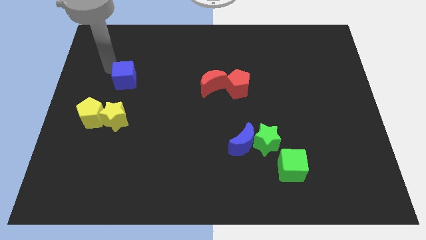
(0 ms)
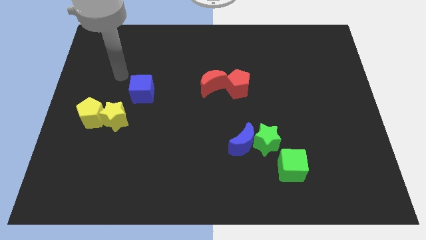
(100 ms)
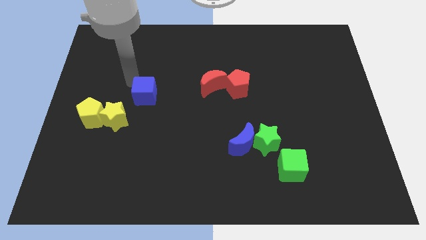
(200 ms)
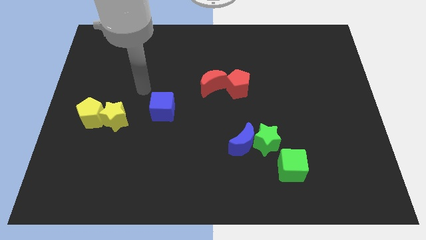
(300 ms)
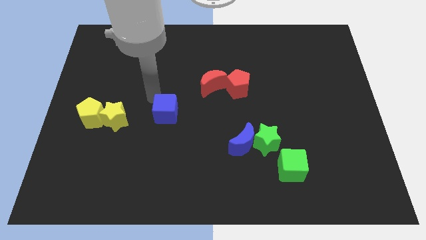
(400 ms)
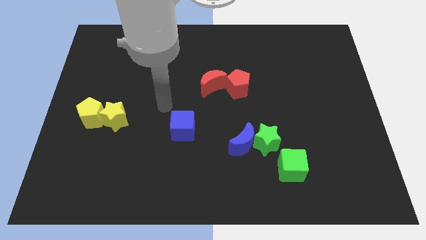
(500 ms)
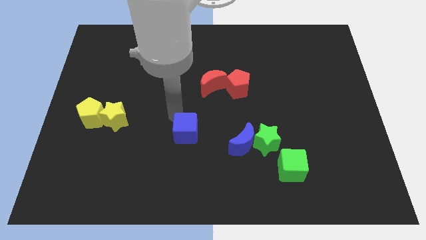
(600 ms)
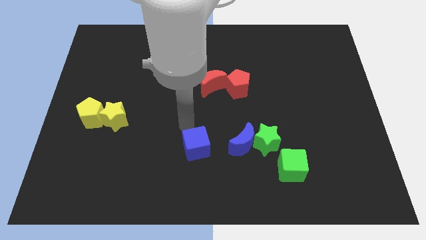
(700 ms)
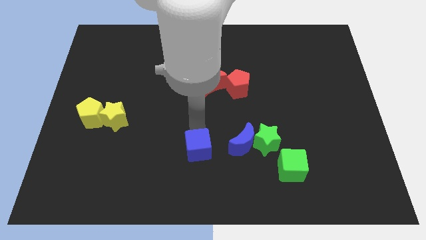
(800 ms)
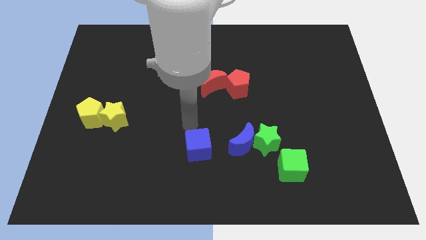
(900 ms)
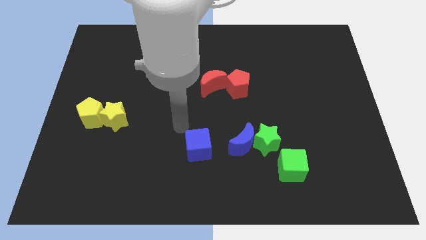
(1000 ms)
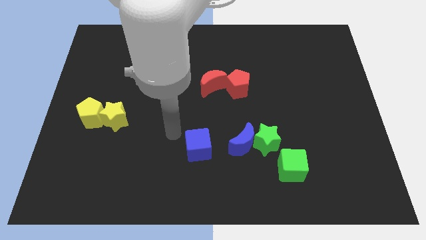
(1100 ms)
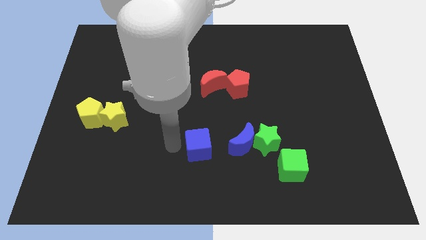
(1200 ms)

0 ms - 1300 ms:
push blue cube towards the left side of the blue crescent

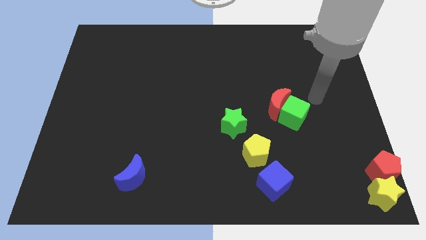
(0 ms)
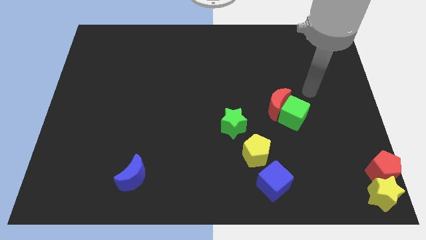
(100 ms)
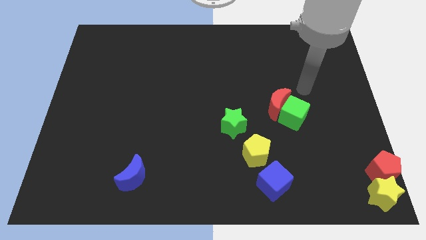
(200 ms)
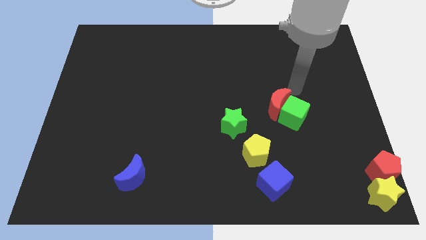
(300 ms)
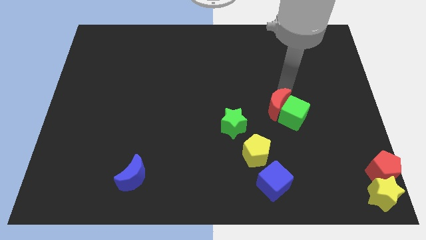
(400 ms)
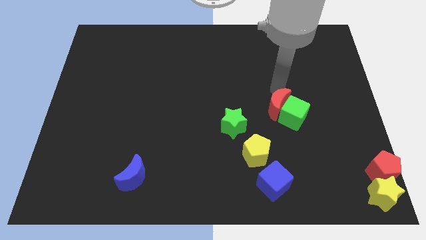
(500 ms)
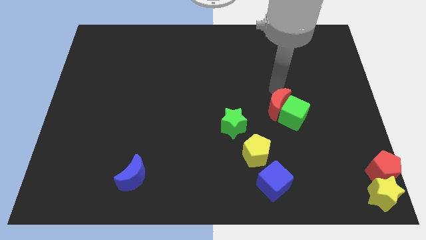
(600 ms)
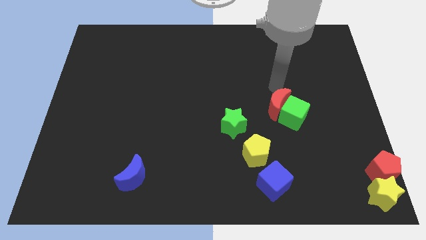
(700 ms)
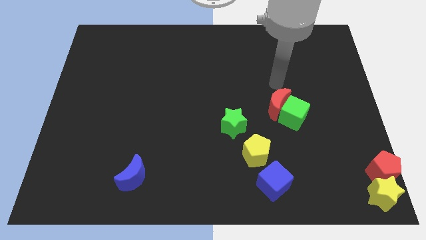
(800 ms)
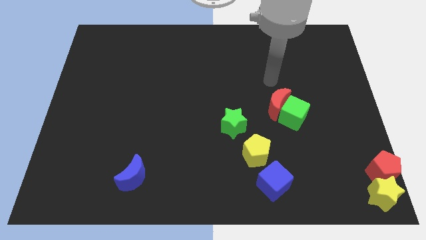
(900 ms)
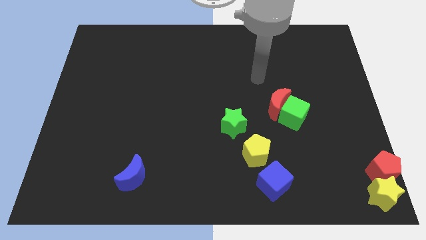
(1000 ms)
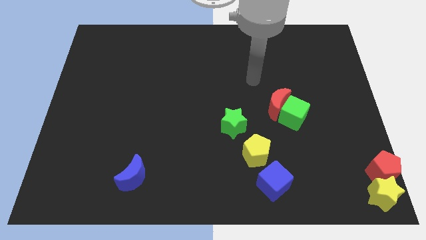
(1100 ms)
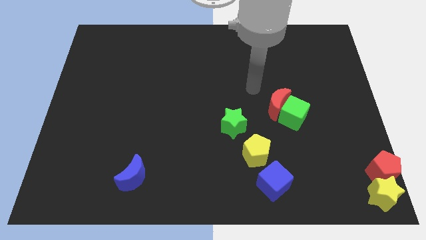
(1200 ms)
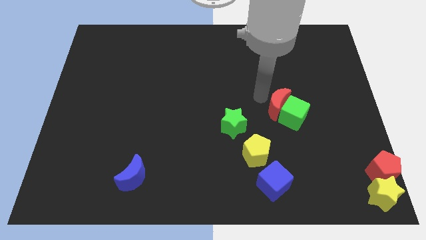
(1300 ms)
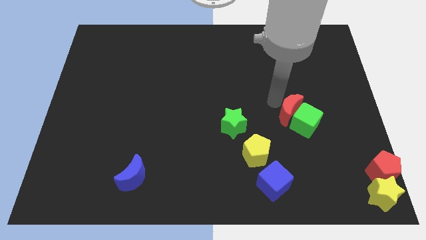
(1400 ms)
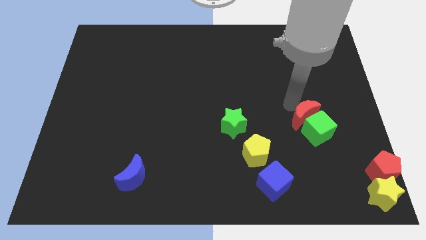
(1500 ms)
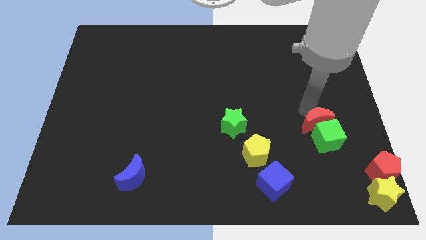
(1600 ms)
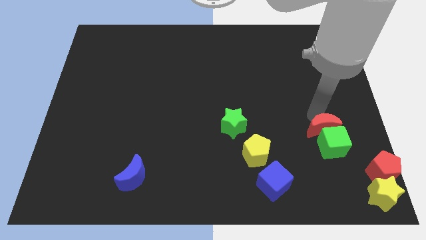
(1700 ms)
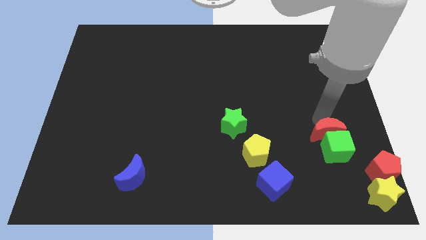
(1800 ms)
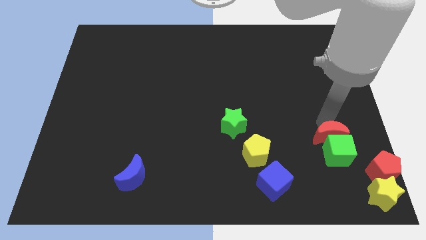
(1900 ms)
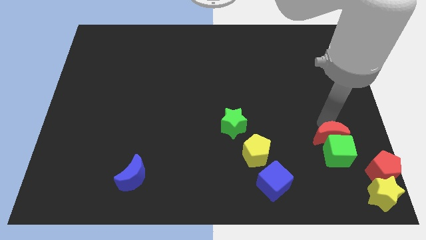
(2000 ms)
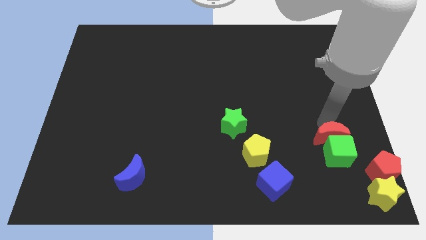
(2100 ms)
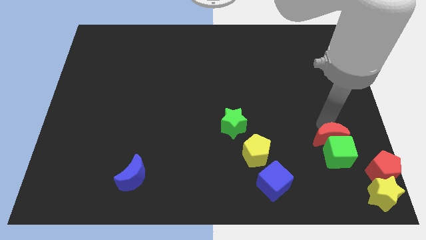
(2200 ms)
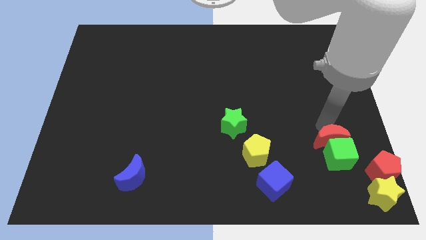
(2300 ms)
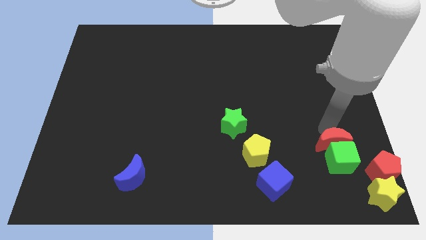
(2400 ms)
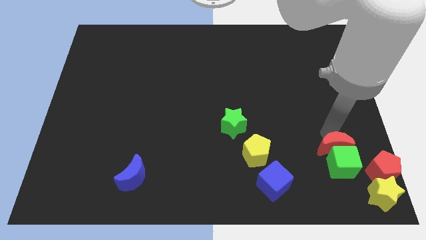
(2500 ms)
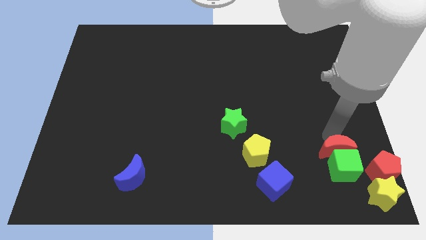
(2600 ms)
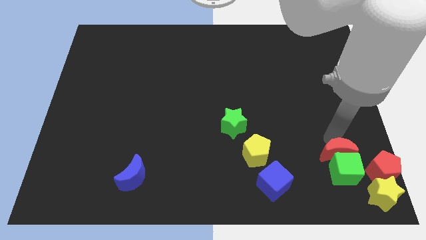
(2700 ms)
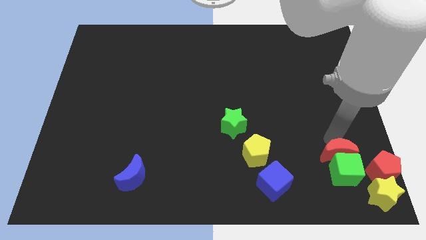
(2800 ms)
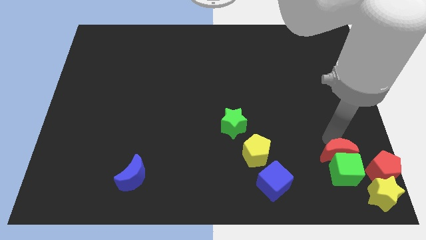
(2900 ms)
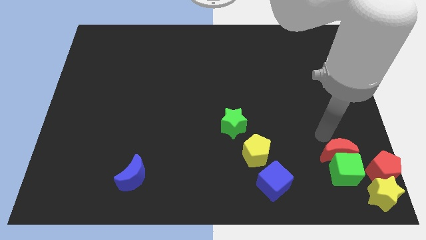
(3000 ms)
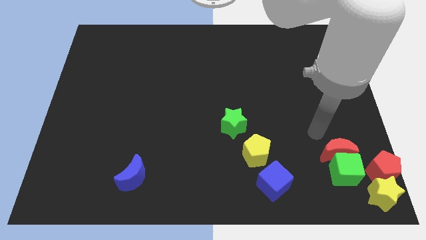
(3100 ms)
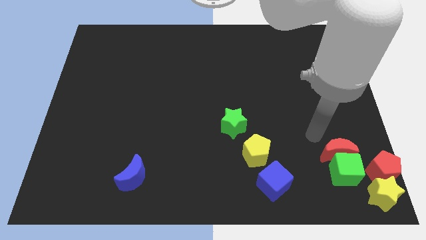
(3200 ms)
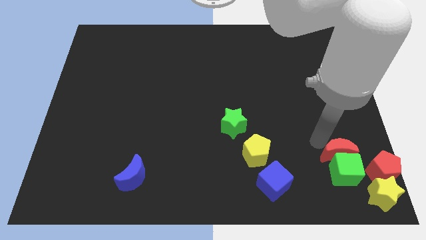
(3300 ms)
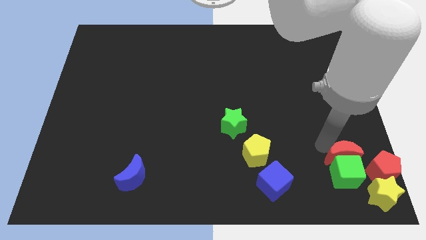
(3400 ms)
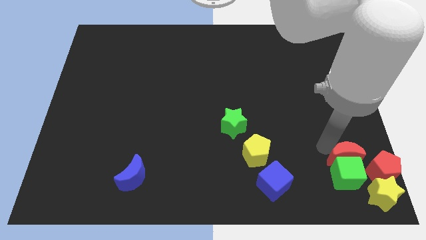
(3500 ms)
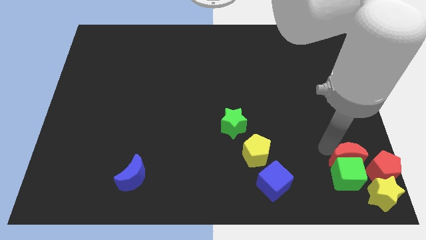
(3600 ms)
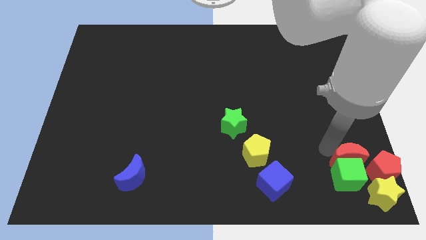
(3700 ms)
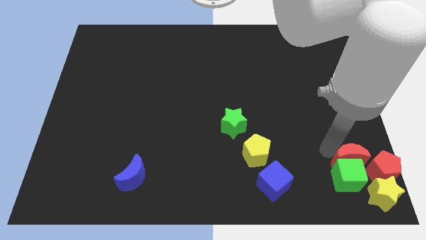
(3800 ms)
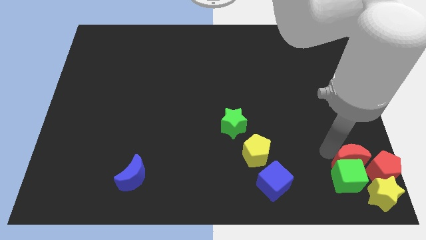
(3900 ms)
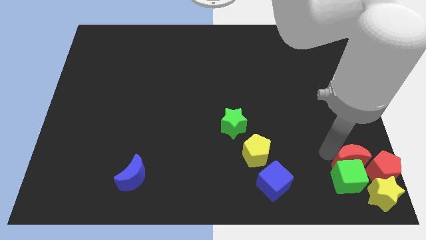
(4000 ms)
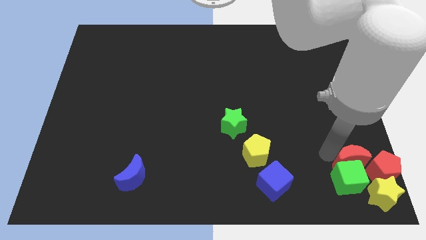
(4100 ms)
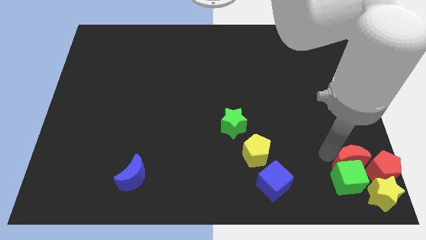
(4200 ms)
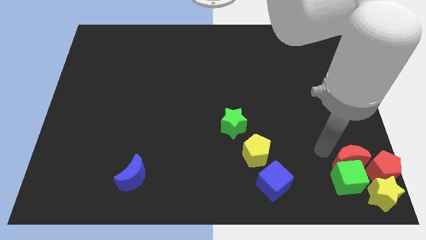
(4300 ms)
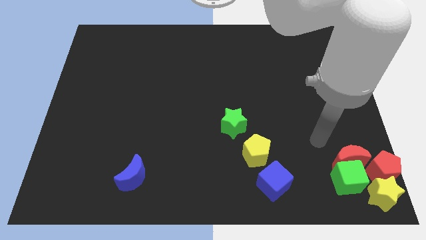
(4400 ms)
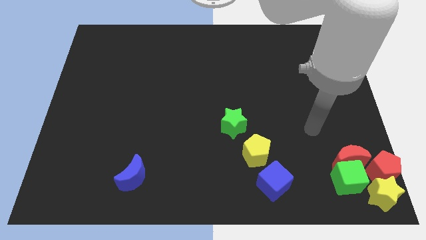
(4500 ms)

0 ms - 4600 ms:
move the red crescent along with green cube to the left of the red pentagon and yellow star

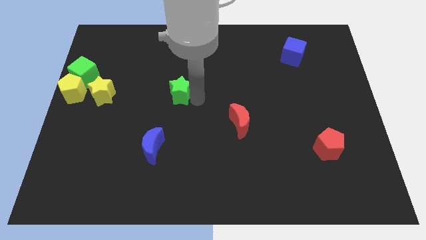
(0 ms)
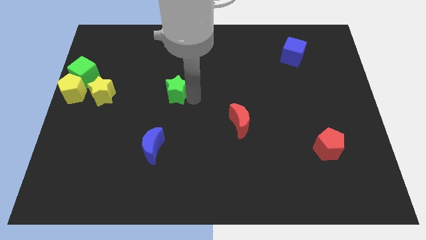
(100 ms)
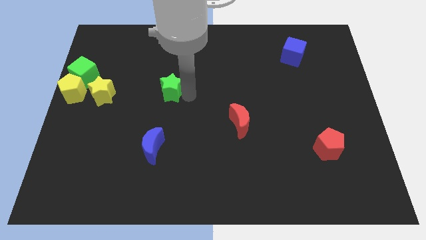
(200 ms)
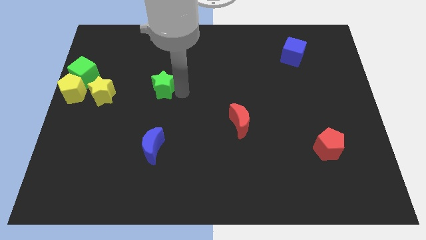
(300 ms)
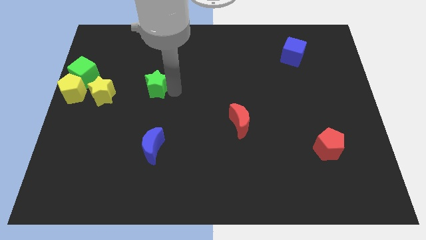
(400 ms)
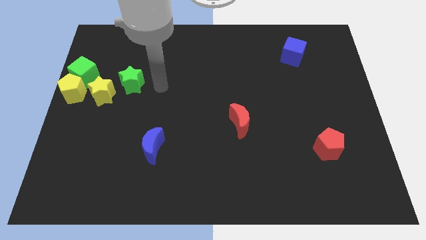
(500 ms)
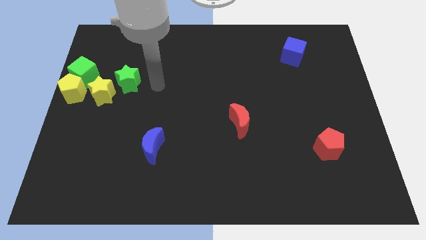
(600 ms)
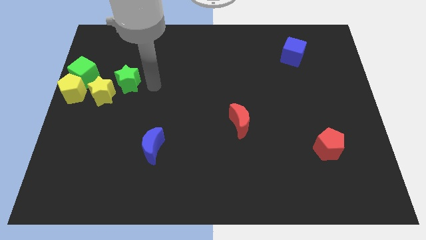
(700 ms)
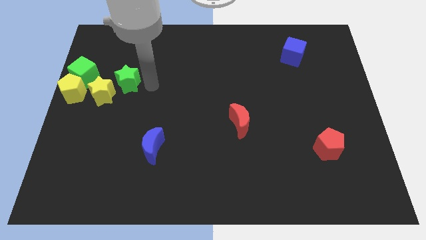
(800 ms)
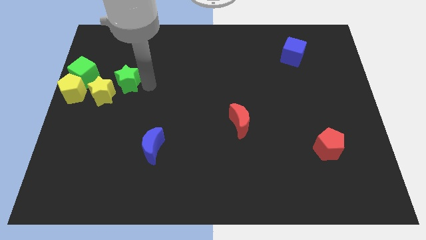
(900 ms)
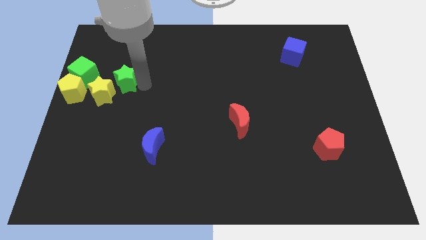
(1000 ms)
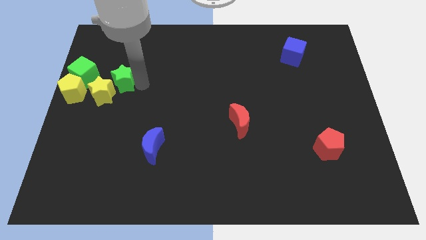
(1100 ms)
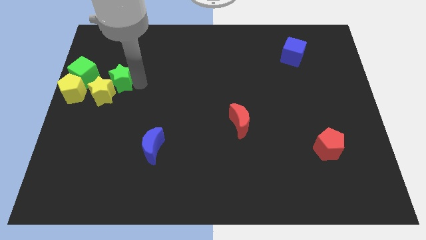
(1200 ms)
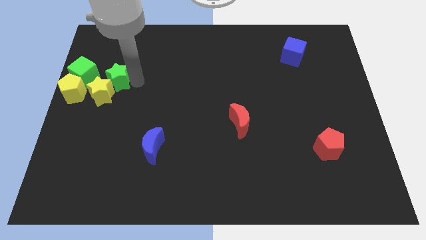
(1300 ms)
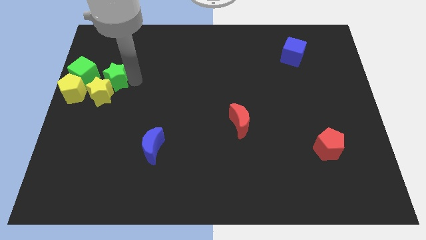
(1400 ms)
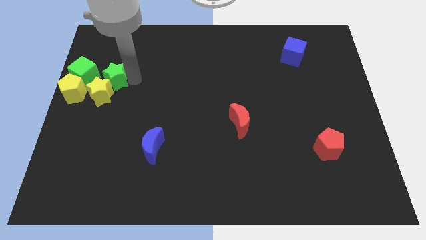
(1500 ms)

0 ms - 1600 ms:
drag the green star into the right side of the yellow star

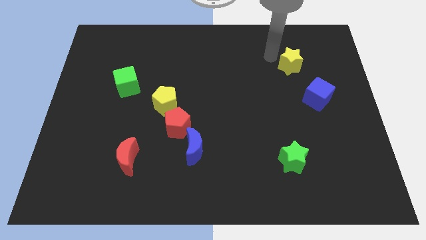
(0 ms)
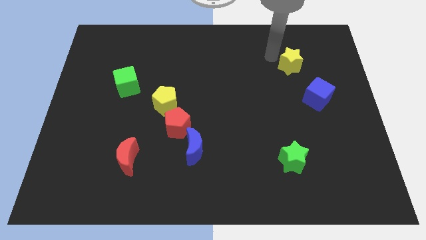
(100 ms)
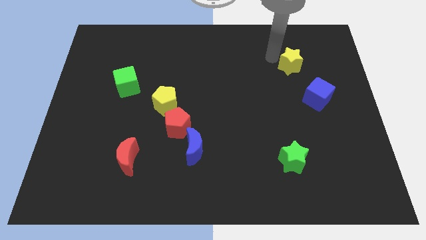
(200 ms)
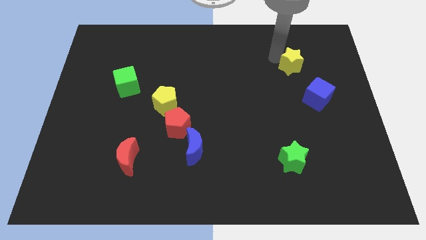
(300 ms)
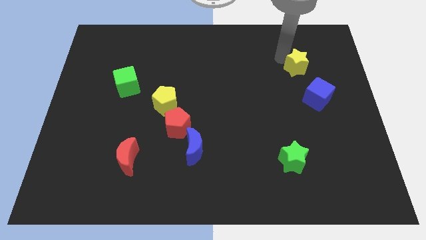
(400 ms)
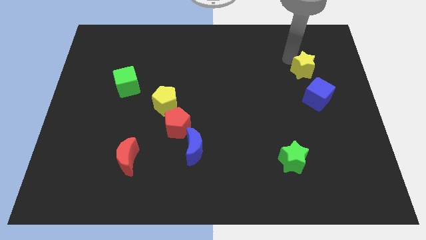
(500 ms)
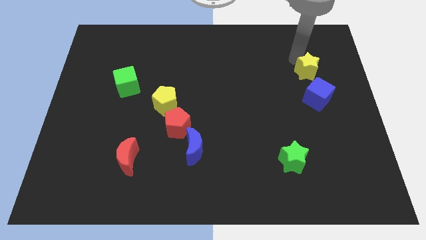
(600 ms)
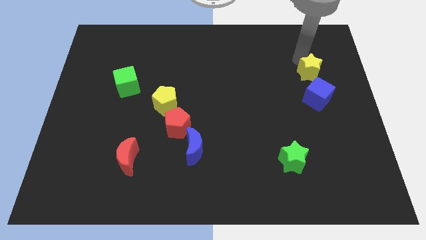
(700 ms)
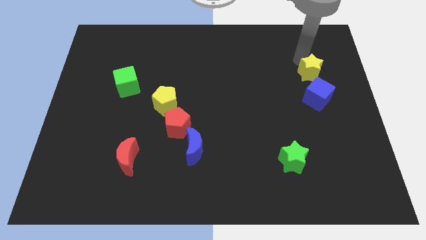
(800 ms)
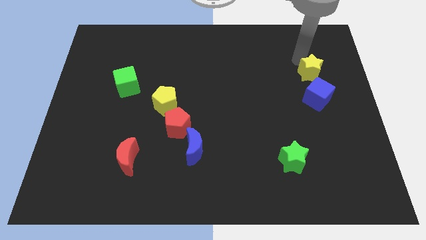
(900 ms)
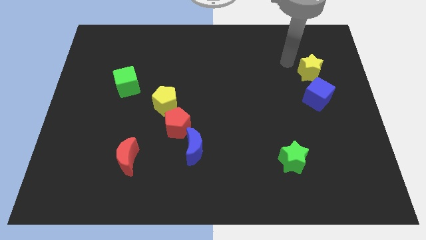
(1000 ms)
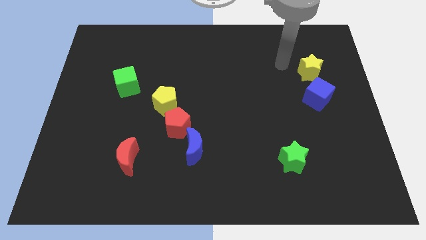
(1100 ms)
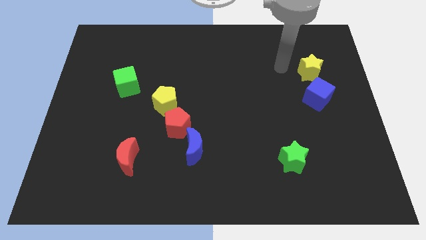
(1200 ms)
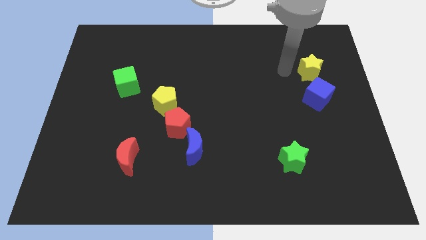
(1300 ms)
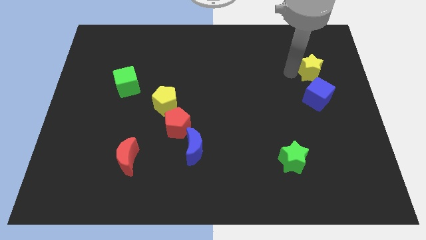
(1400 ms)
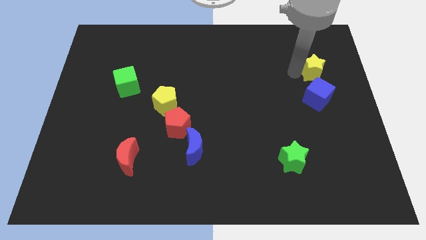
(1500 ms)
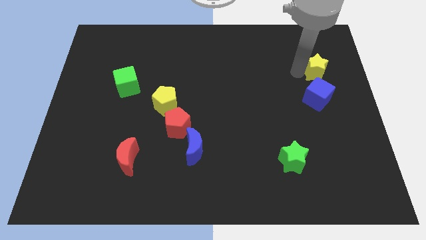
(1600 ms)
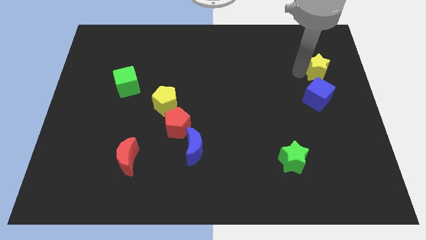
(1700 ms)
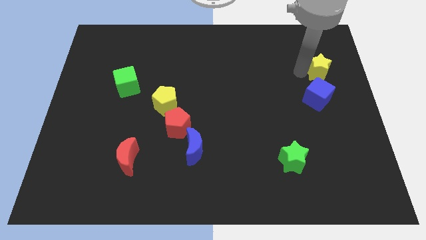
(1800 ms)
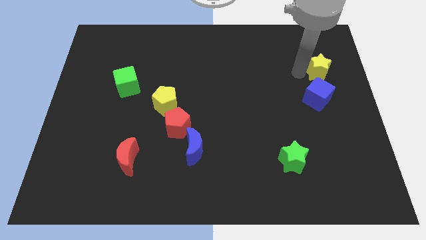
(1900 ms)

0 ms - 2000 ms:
place the yellow star at the top of the blue cube
